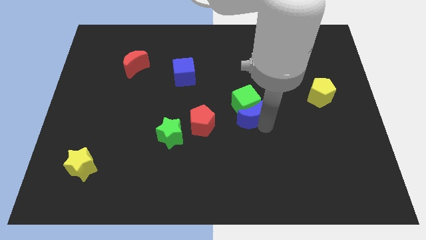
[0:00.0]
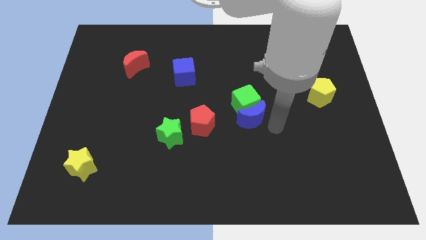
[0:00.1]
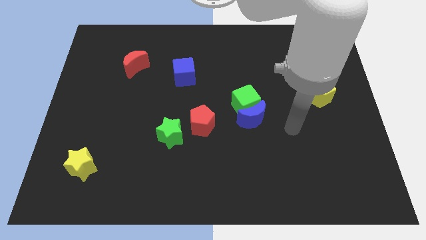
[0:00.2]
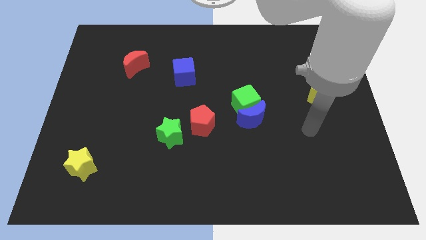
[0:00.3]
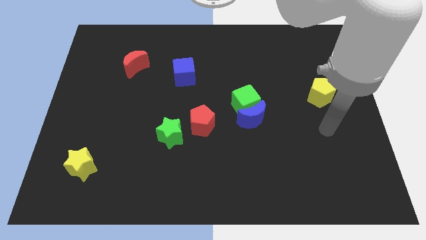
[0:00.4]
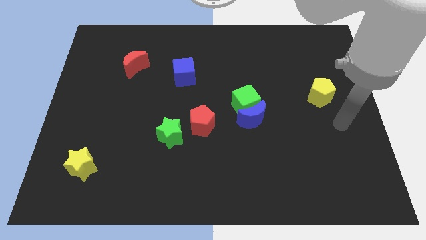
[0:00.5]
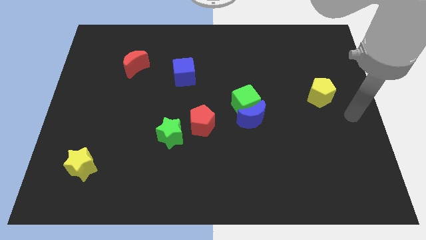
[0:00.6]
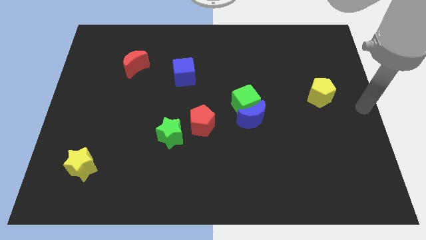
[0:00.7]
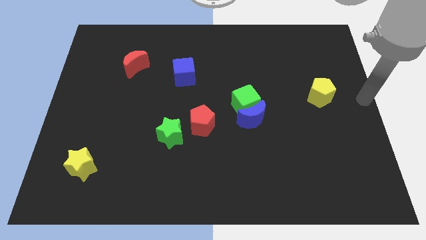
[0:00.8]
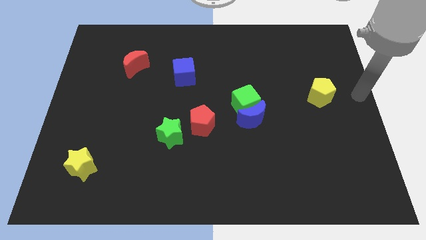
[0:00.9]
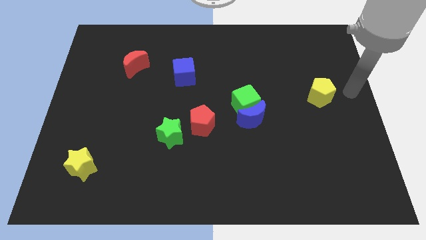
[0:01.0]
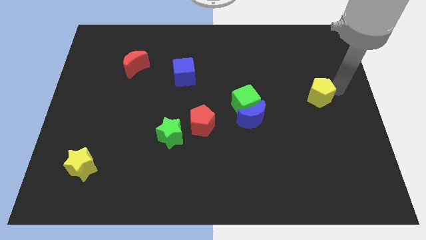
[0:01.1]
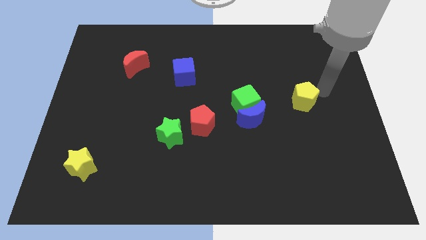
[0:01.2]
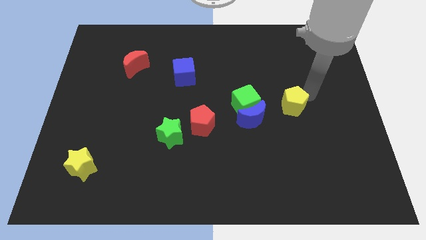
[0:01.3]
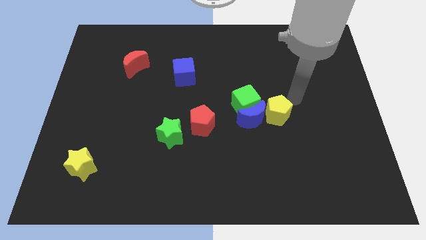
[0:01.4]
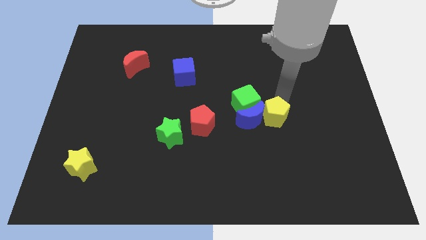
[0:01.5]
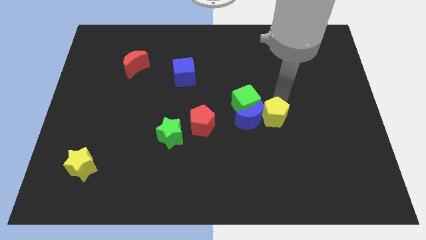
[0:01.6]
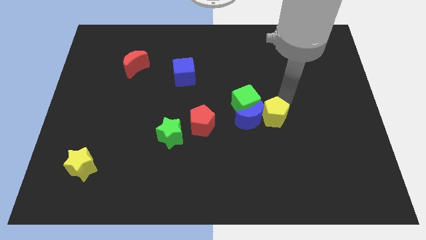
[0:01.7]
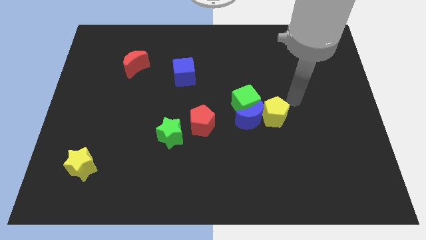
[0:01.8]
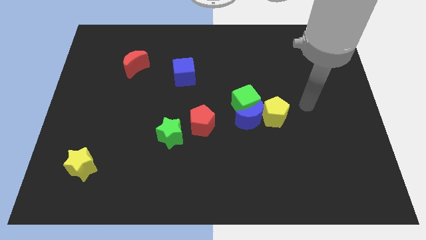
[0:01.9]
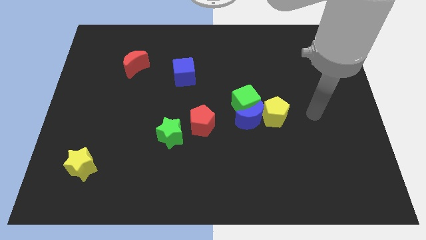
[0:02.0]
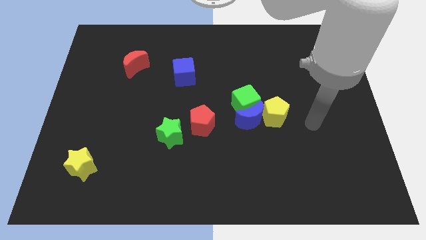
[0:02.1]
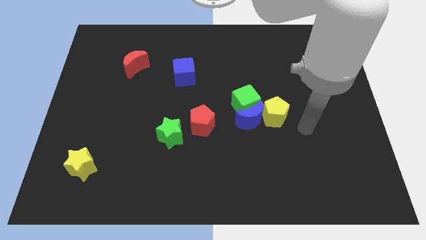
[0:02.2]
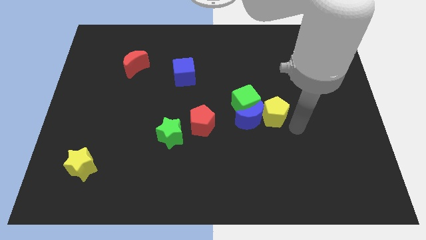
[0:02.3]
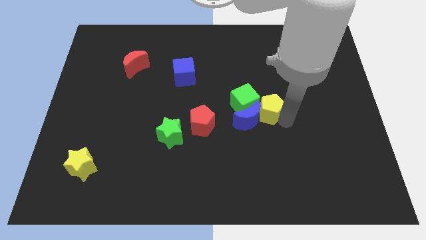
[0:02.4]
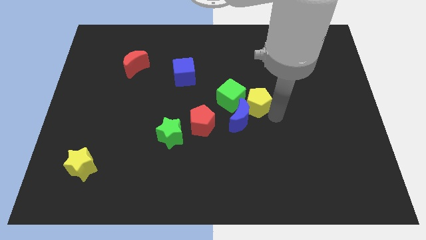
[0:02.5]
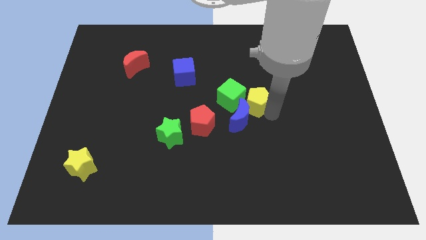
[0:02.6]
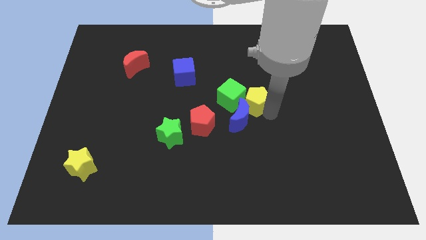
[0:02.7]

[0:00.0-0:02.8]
push yellow pentagon in green cube

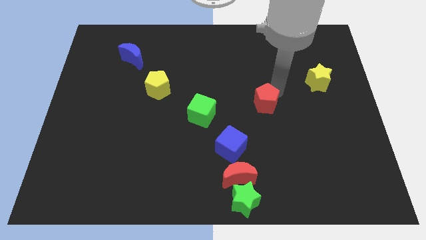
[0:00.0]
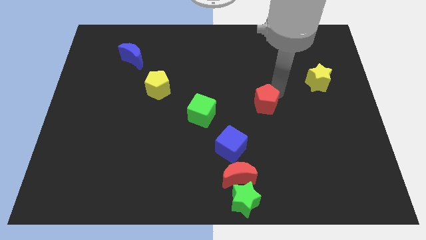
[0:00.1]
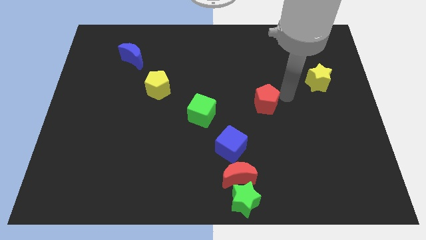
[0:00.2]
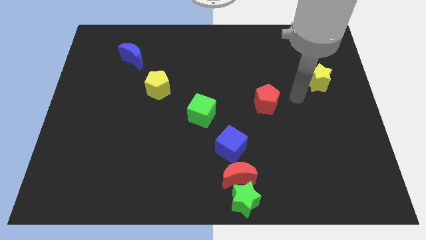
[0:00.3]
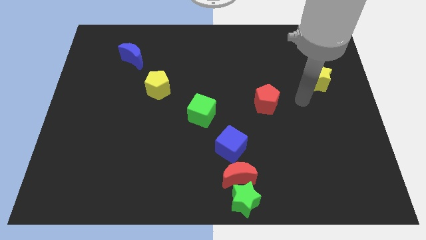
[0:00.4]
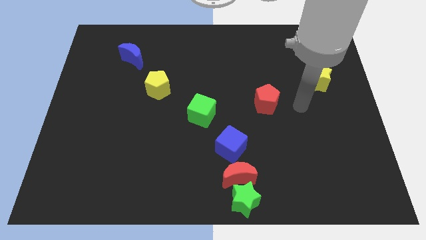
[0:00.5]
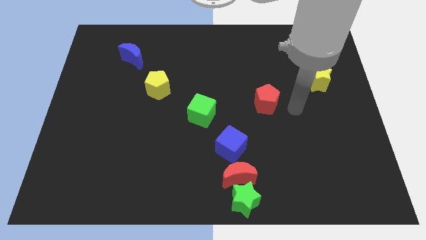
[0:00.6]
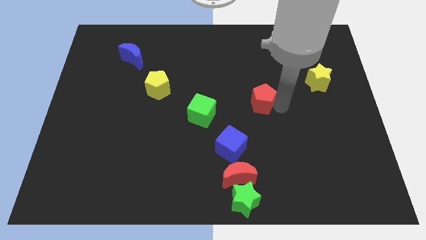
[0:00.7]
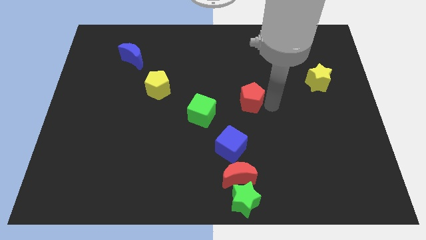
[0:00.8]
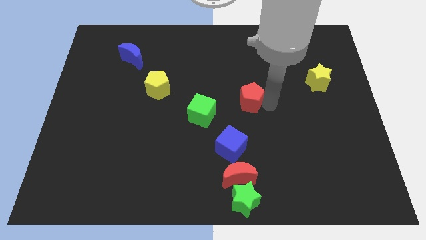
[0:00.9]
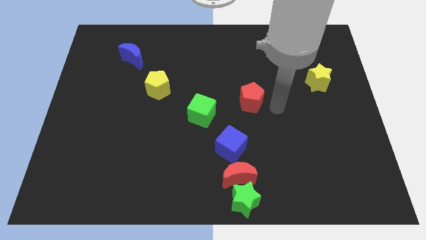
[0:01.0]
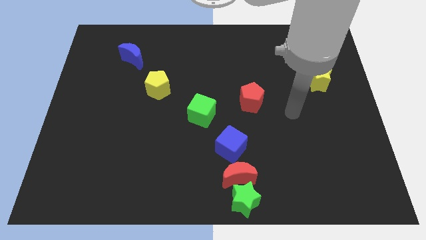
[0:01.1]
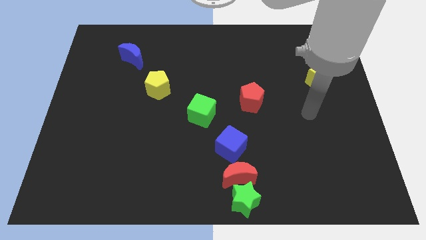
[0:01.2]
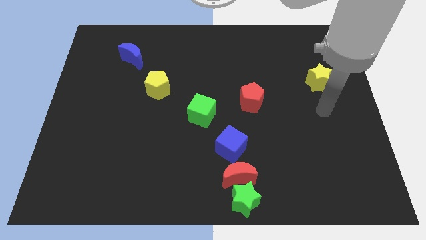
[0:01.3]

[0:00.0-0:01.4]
push the red pentagon towards the center of board

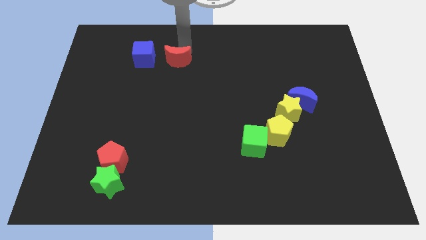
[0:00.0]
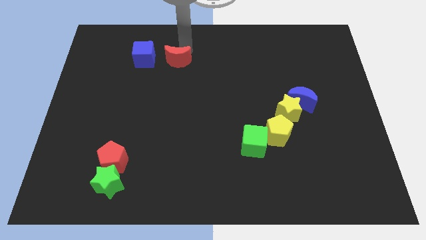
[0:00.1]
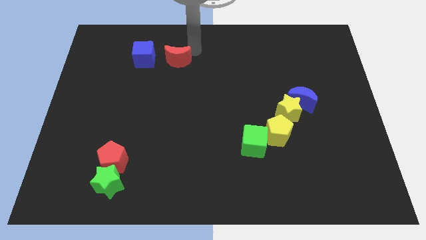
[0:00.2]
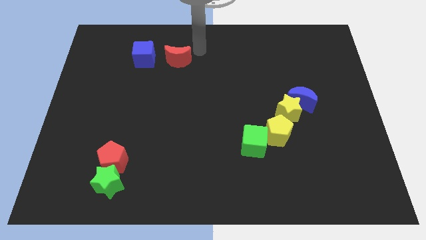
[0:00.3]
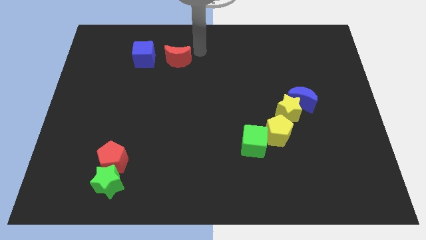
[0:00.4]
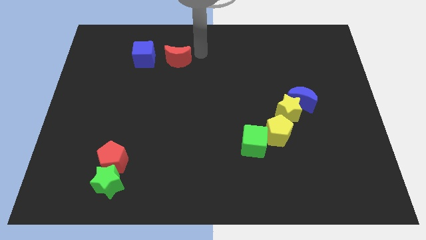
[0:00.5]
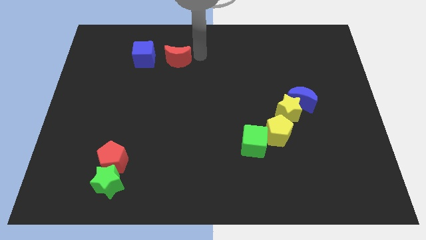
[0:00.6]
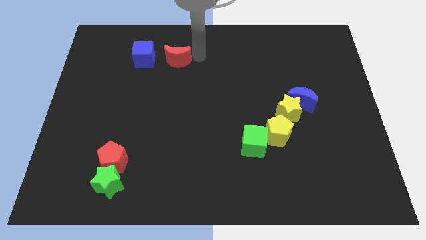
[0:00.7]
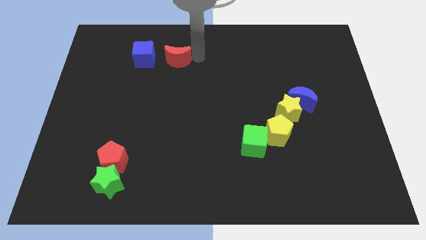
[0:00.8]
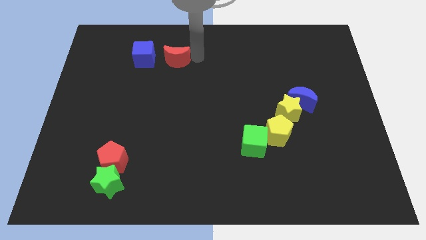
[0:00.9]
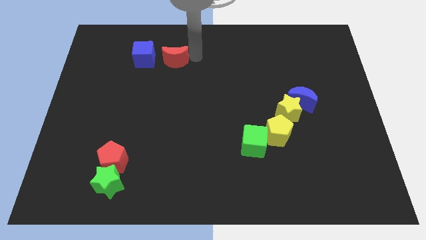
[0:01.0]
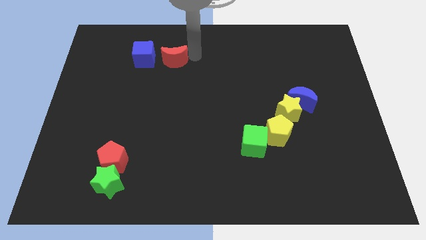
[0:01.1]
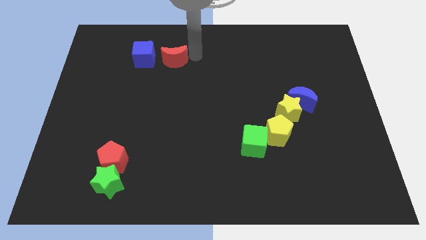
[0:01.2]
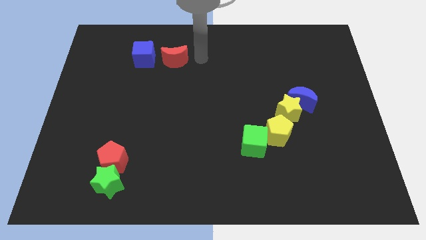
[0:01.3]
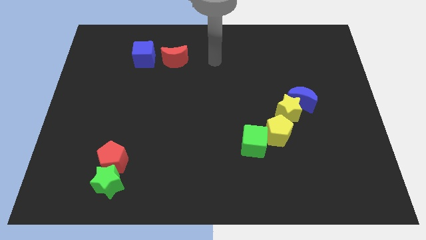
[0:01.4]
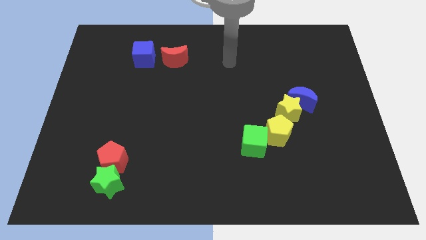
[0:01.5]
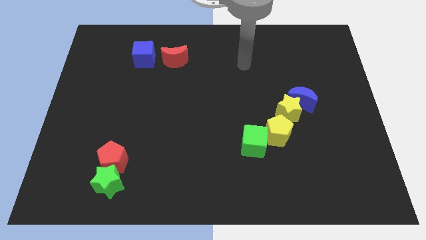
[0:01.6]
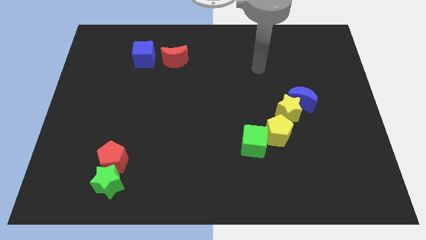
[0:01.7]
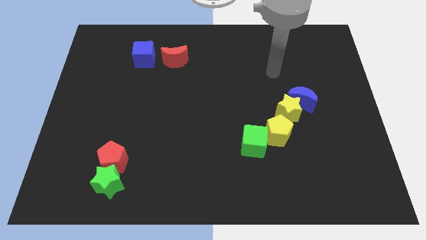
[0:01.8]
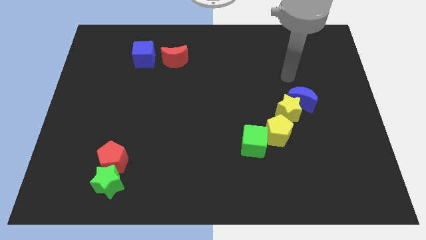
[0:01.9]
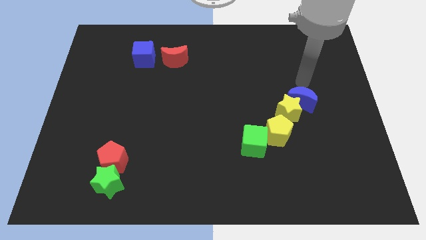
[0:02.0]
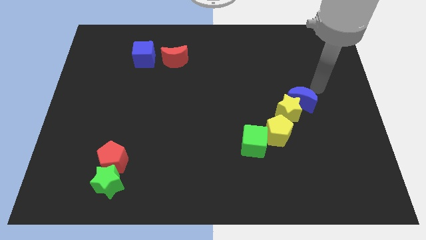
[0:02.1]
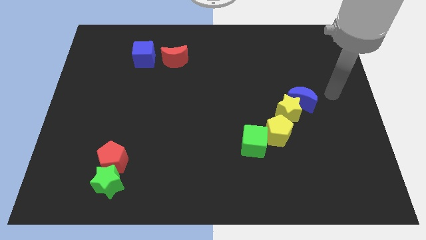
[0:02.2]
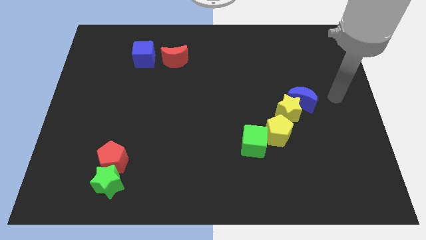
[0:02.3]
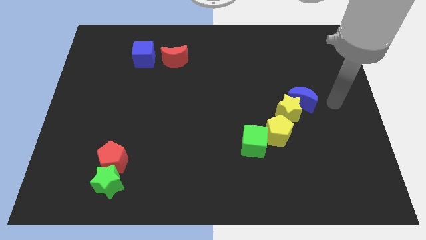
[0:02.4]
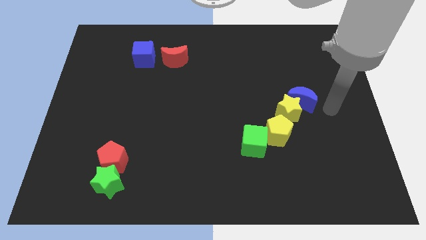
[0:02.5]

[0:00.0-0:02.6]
move the red crescent to the left of the board

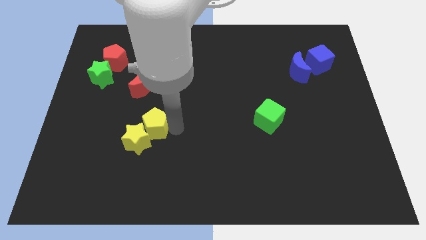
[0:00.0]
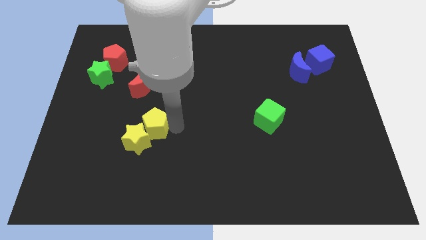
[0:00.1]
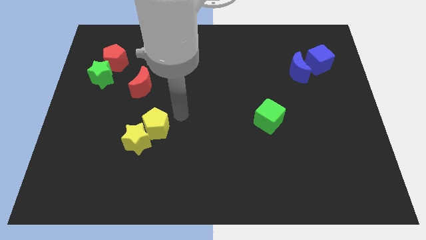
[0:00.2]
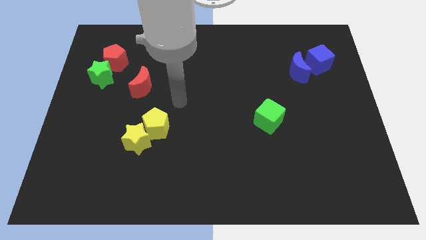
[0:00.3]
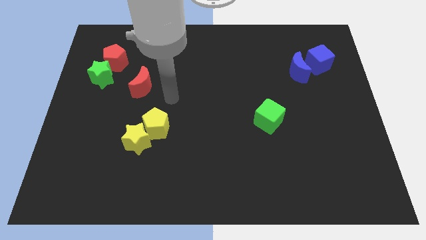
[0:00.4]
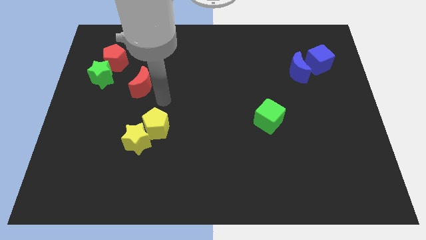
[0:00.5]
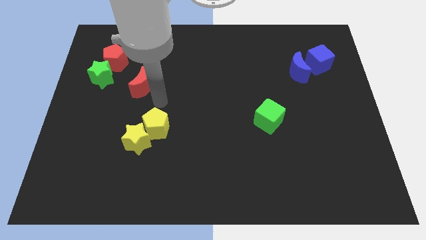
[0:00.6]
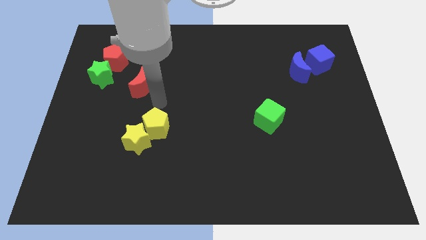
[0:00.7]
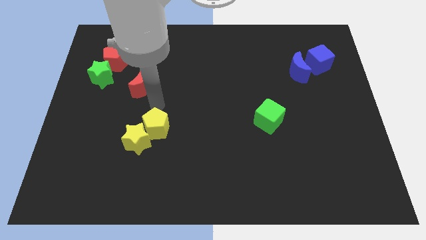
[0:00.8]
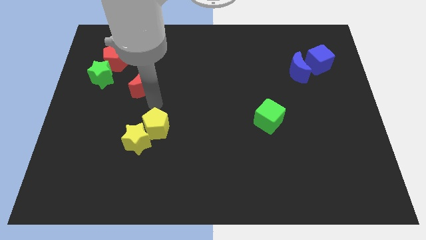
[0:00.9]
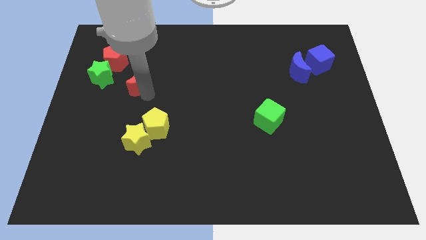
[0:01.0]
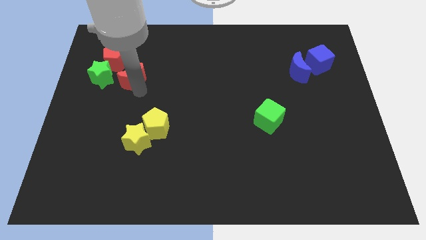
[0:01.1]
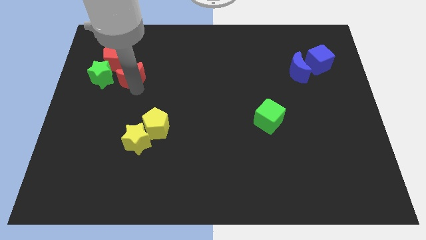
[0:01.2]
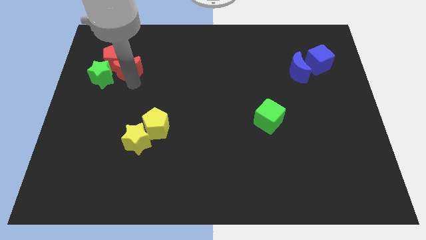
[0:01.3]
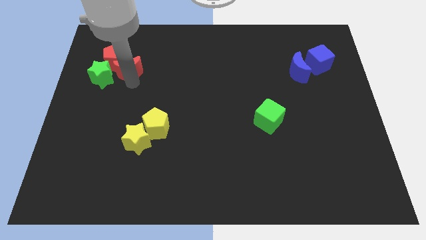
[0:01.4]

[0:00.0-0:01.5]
slide the red crescent into the bottom side of the red pentagon

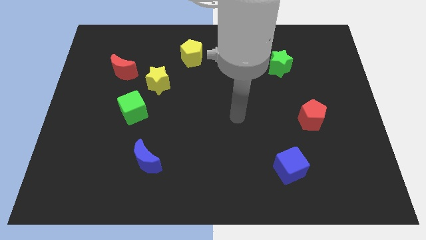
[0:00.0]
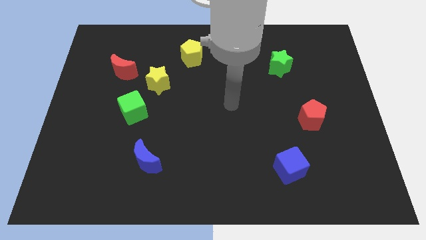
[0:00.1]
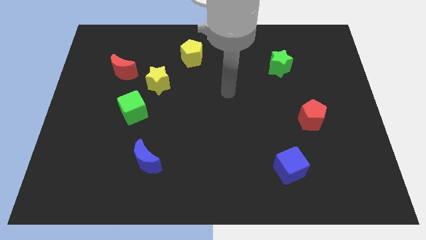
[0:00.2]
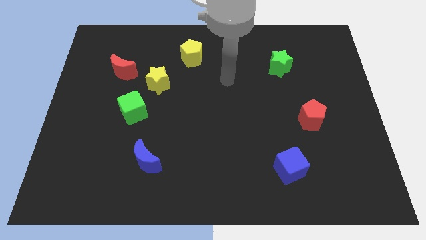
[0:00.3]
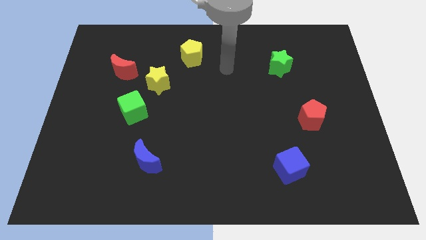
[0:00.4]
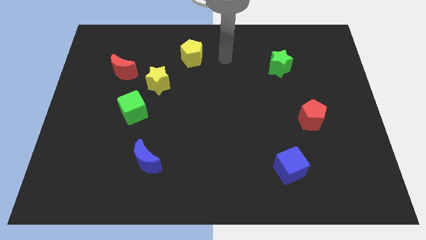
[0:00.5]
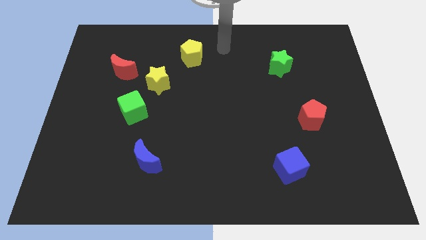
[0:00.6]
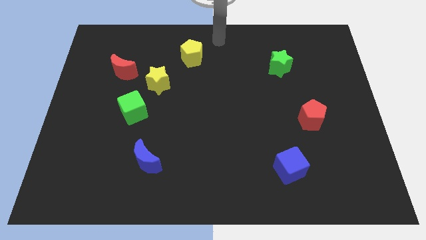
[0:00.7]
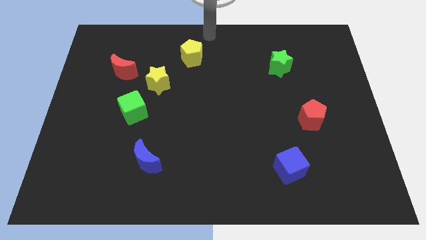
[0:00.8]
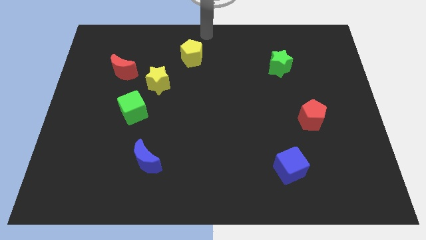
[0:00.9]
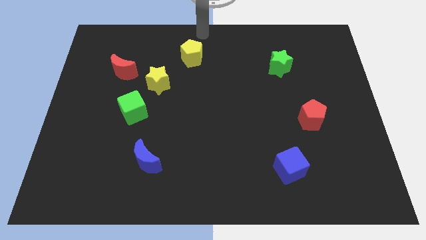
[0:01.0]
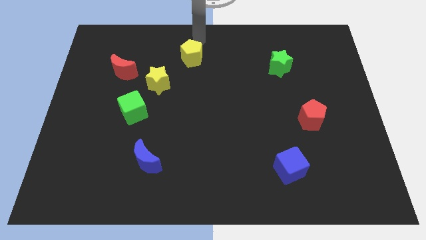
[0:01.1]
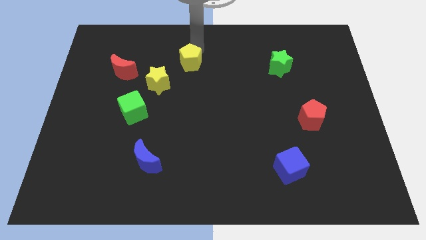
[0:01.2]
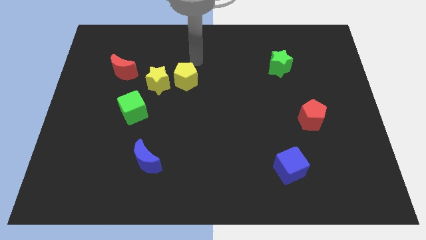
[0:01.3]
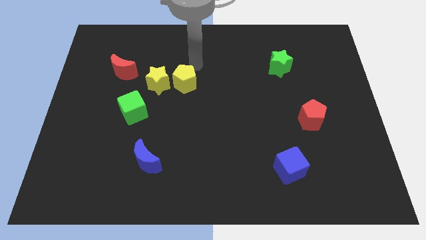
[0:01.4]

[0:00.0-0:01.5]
place the yellow pentagon on right side of yellow star
